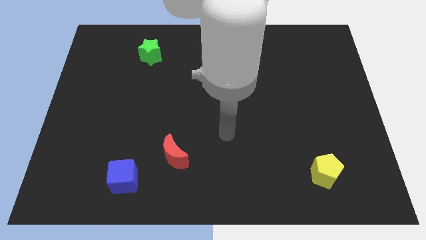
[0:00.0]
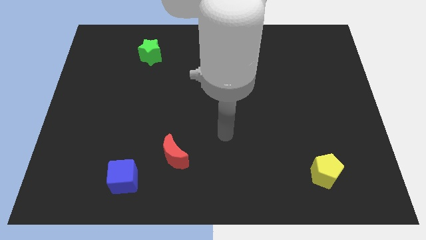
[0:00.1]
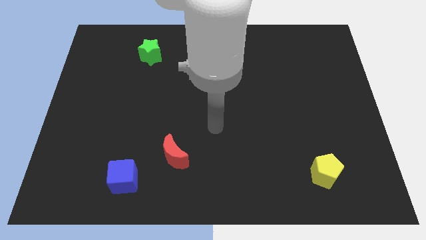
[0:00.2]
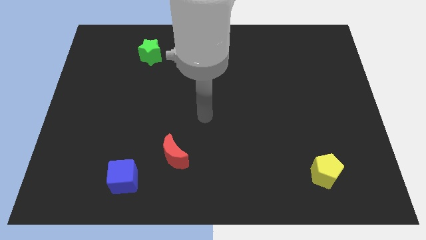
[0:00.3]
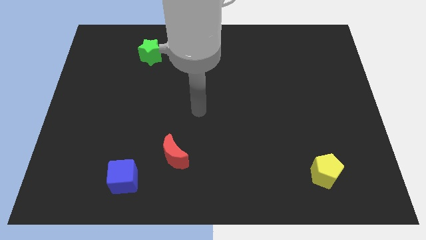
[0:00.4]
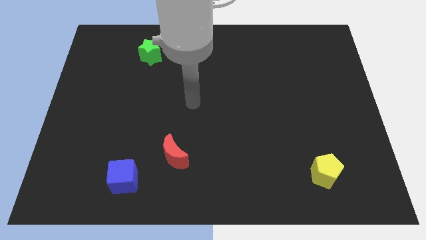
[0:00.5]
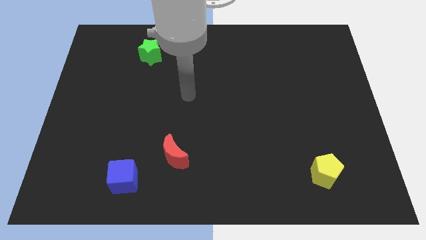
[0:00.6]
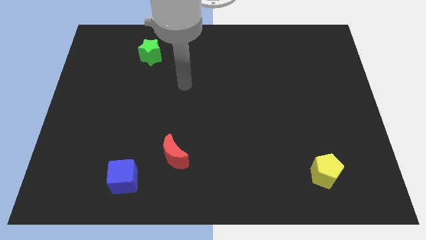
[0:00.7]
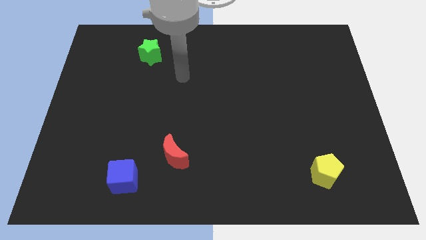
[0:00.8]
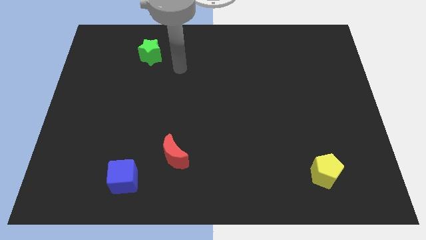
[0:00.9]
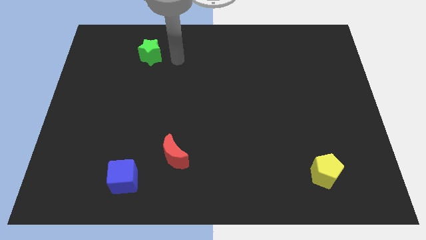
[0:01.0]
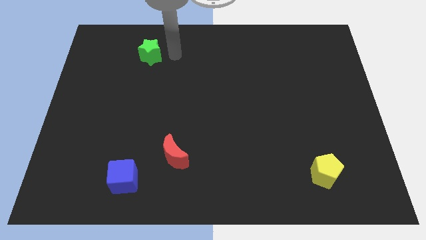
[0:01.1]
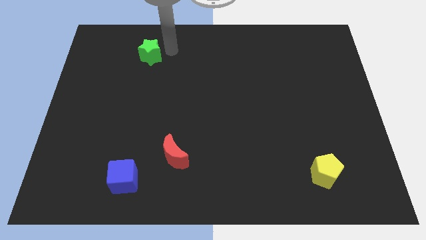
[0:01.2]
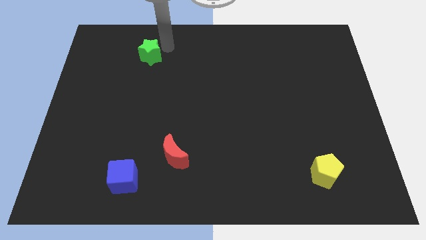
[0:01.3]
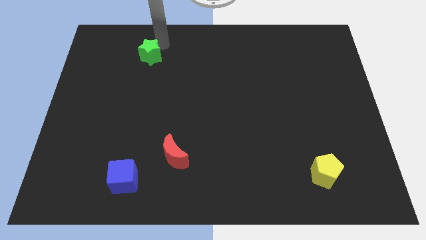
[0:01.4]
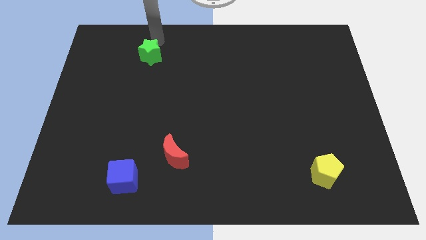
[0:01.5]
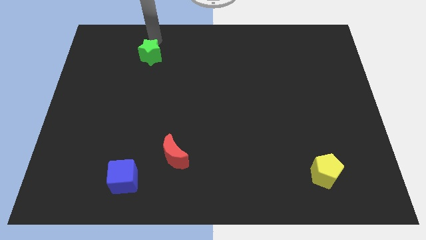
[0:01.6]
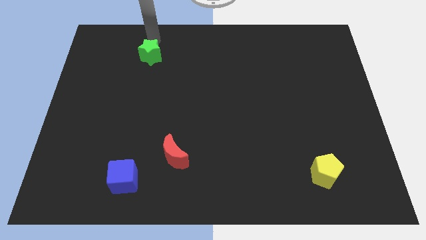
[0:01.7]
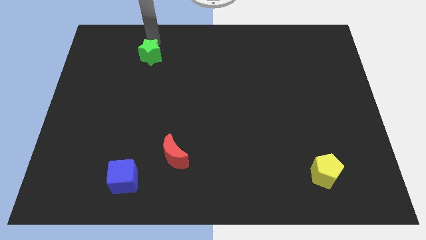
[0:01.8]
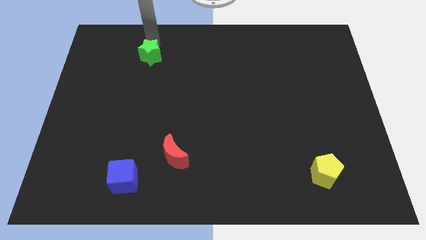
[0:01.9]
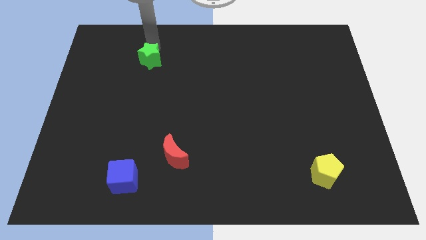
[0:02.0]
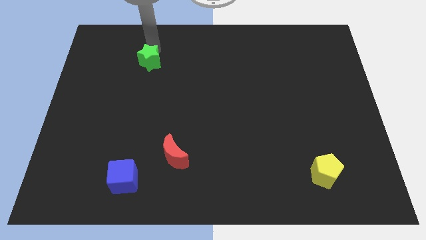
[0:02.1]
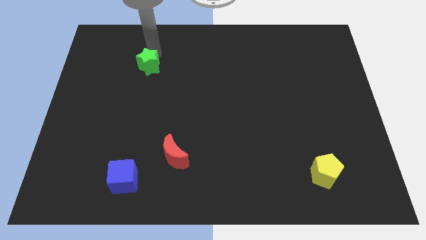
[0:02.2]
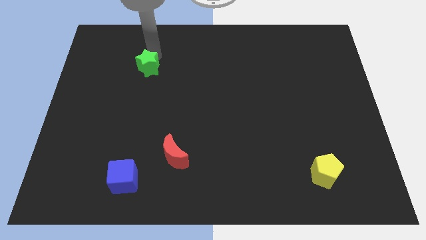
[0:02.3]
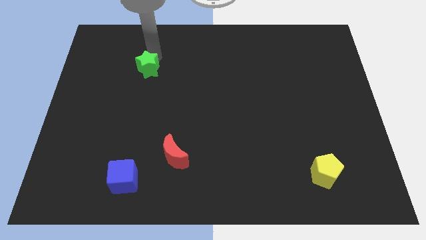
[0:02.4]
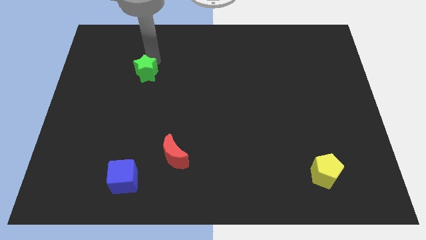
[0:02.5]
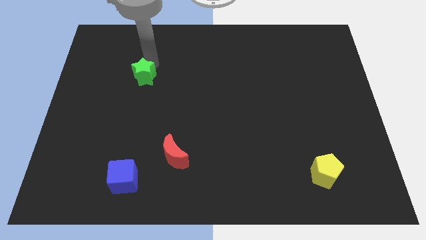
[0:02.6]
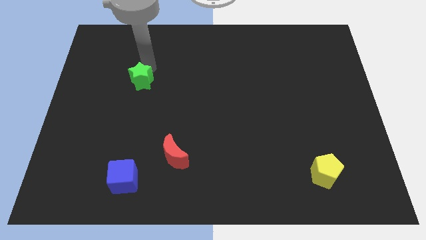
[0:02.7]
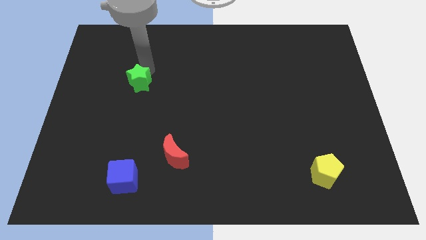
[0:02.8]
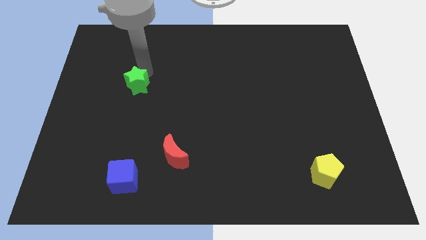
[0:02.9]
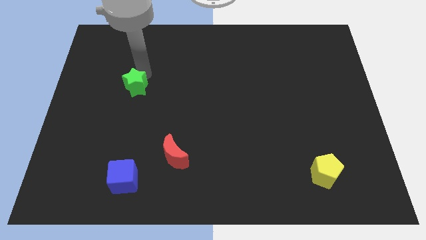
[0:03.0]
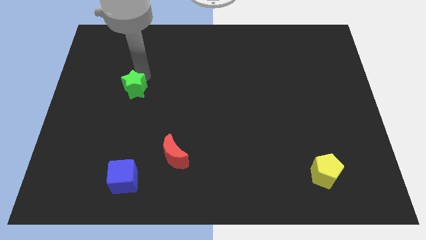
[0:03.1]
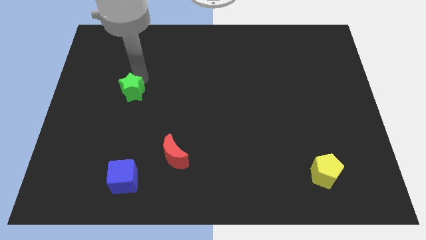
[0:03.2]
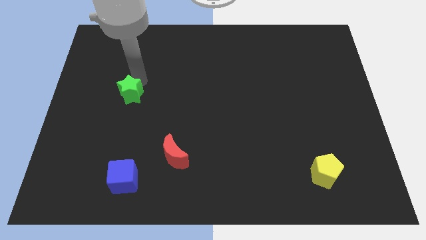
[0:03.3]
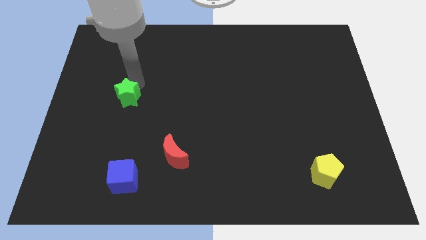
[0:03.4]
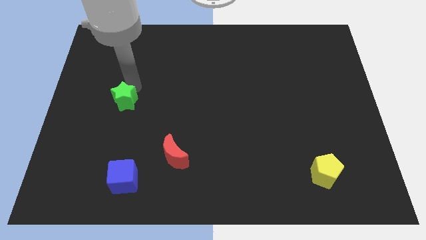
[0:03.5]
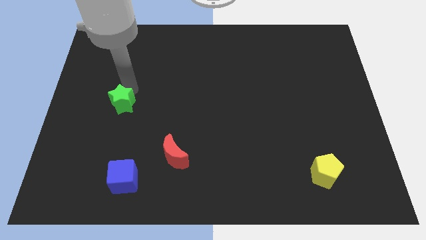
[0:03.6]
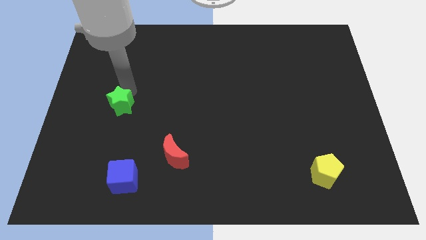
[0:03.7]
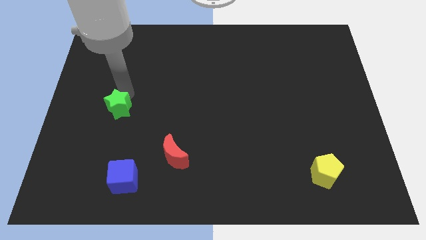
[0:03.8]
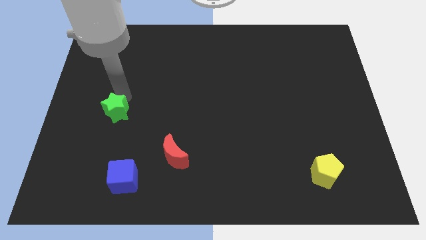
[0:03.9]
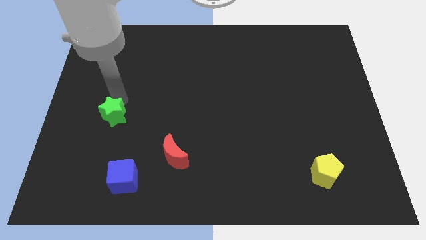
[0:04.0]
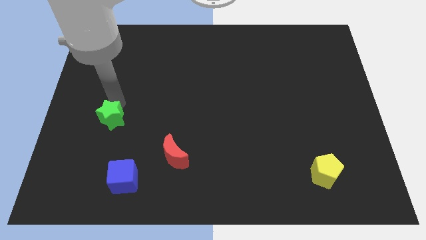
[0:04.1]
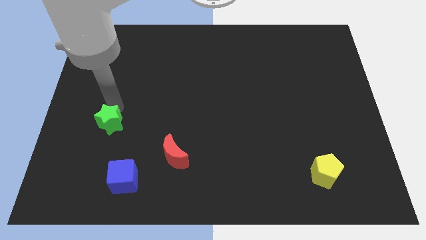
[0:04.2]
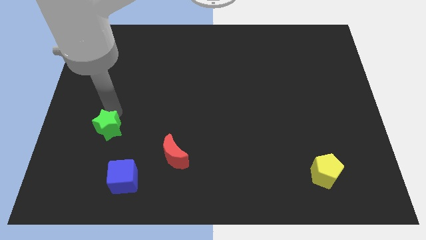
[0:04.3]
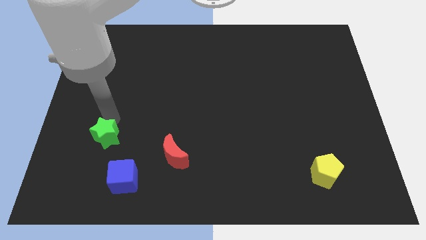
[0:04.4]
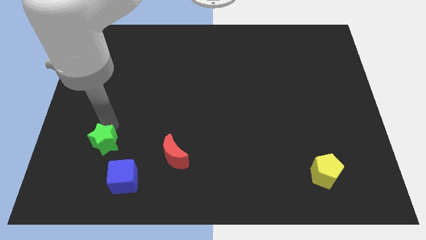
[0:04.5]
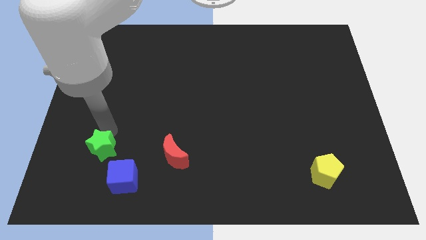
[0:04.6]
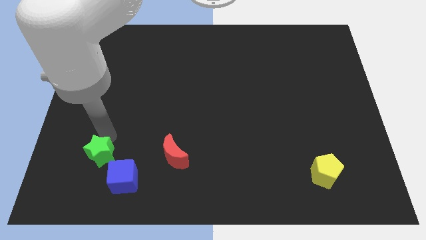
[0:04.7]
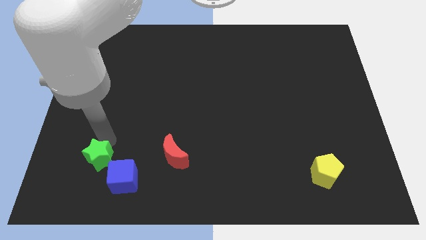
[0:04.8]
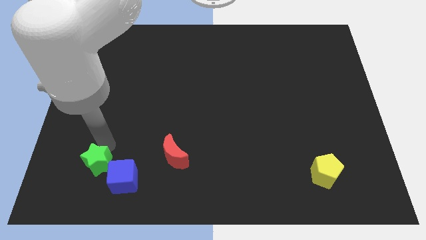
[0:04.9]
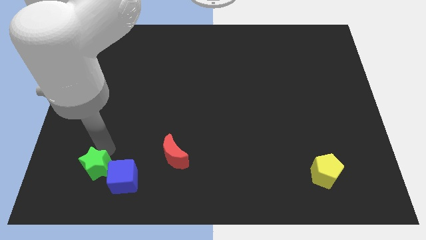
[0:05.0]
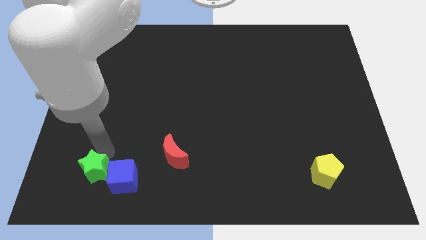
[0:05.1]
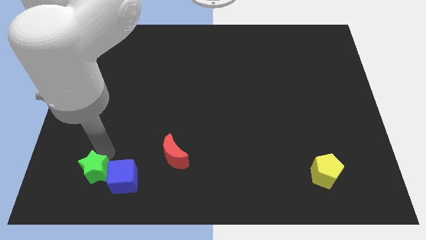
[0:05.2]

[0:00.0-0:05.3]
move the star next to the cube

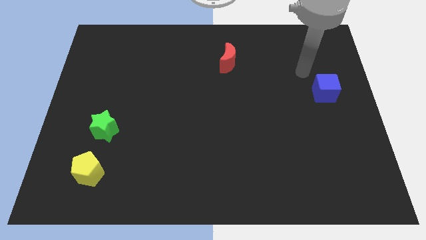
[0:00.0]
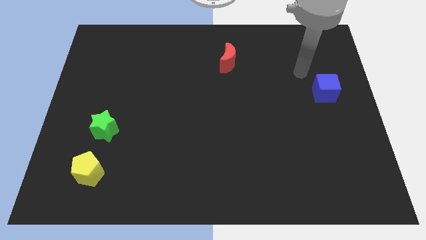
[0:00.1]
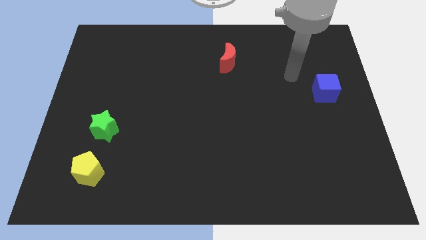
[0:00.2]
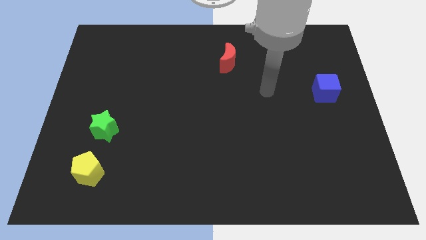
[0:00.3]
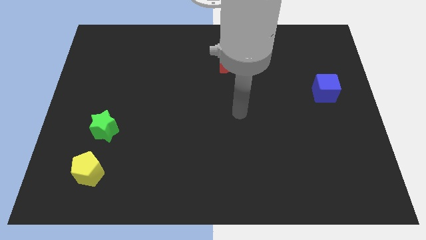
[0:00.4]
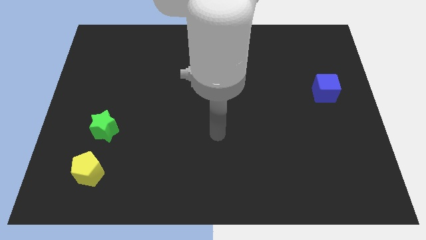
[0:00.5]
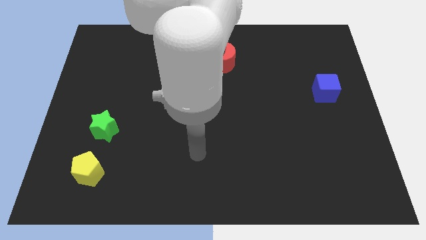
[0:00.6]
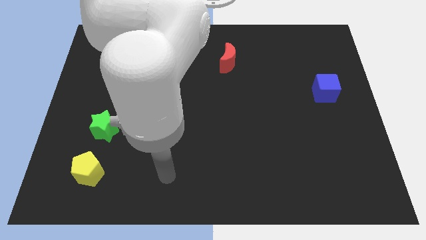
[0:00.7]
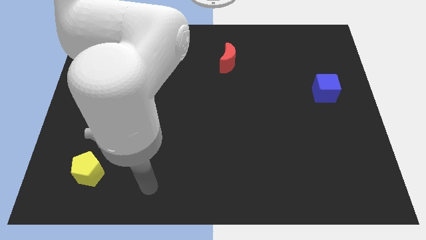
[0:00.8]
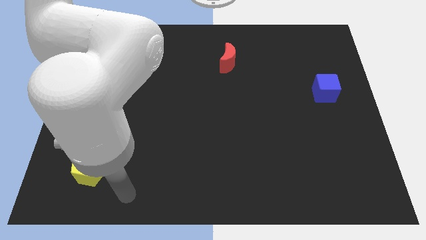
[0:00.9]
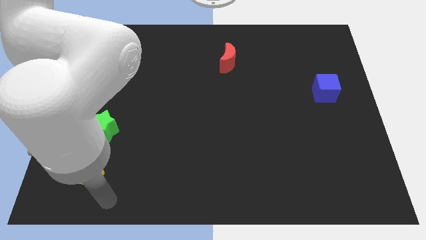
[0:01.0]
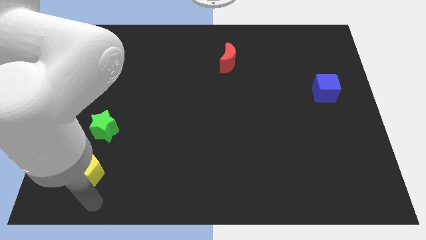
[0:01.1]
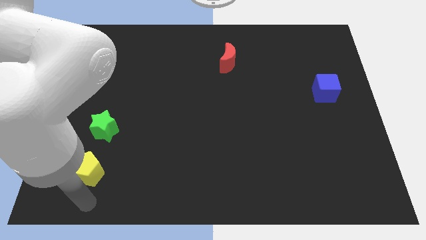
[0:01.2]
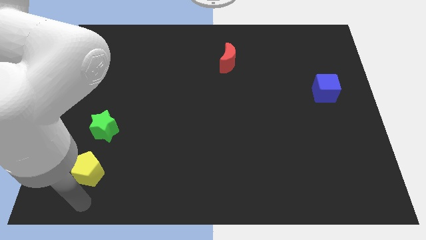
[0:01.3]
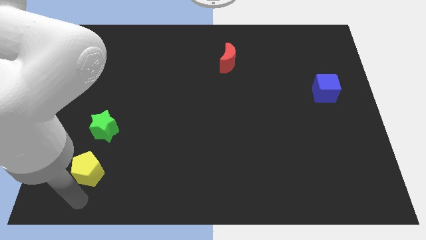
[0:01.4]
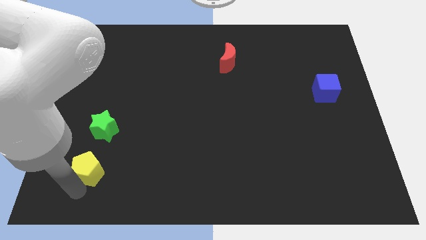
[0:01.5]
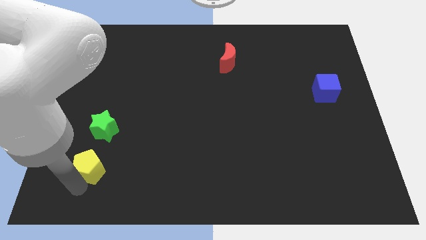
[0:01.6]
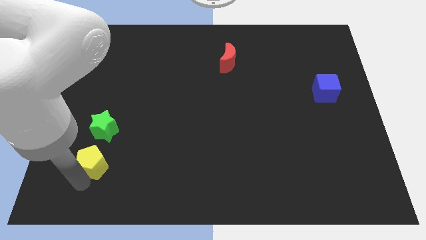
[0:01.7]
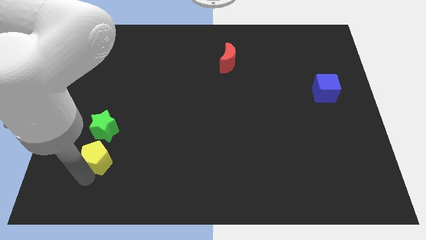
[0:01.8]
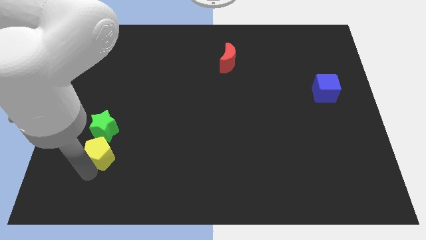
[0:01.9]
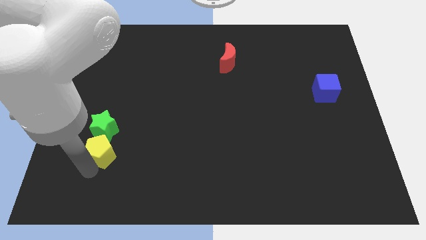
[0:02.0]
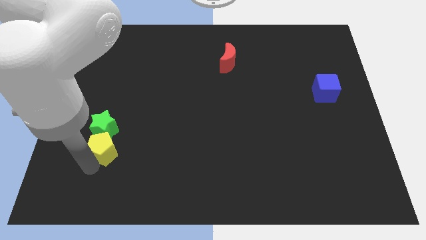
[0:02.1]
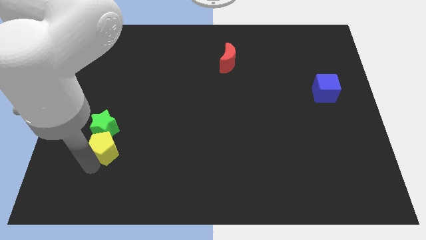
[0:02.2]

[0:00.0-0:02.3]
push the pentagon to the green star

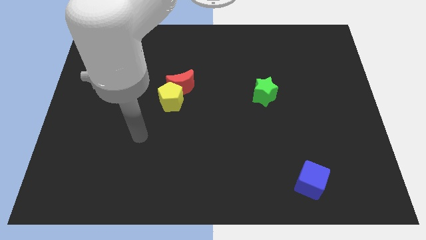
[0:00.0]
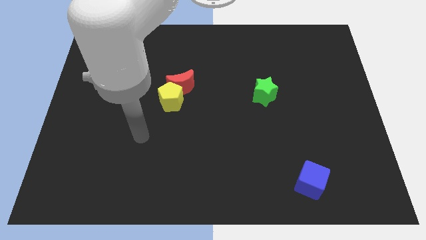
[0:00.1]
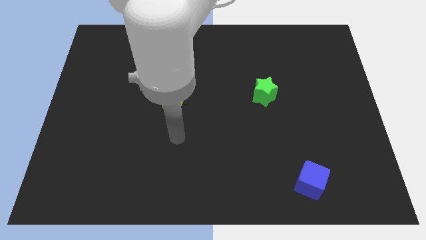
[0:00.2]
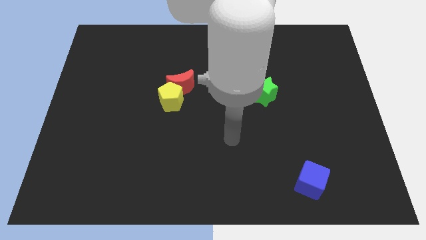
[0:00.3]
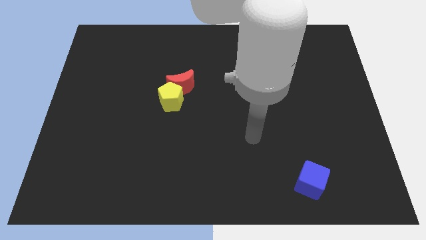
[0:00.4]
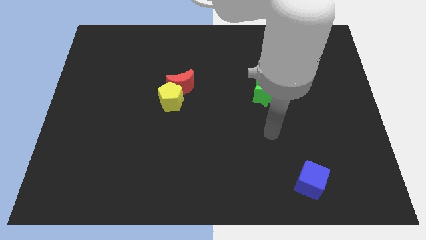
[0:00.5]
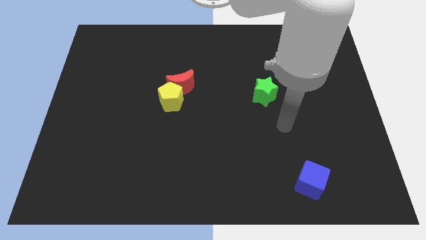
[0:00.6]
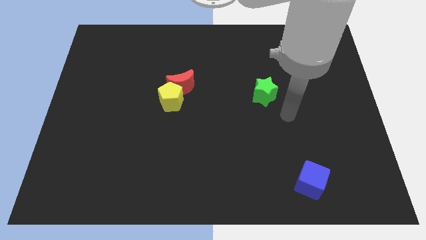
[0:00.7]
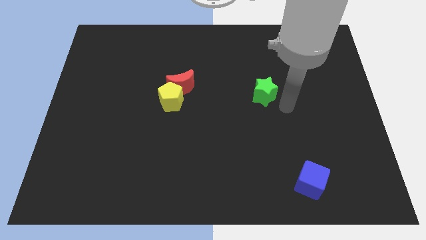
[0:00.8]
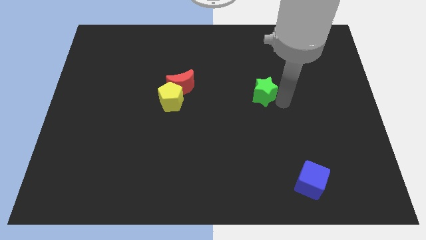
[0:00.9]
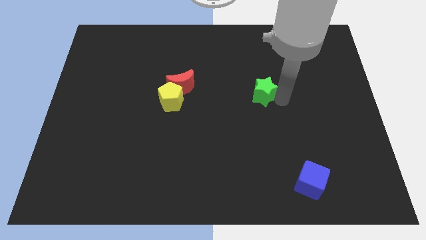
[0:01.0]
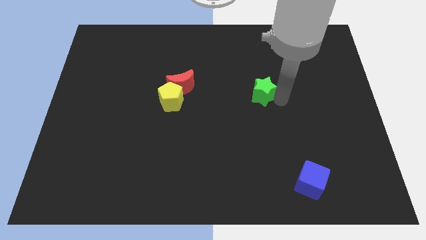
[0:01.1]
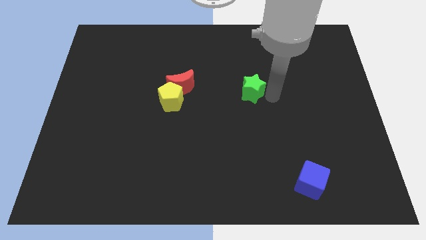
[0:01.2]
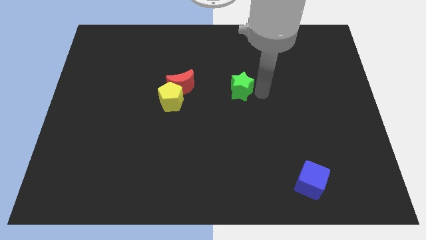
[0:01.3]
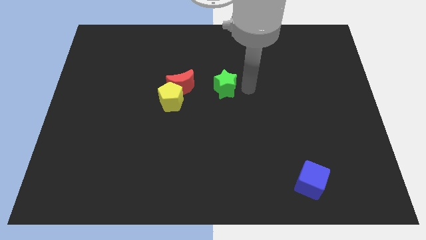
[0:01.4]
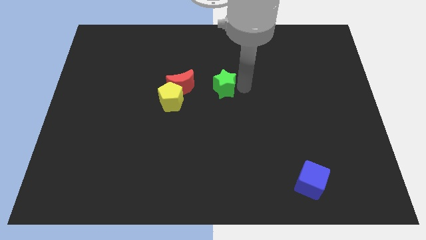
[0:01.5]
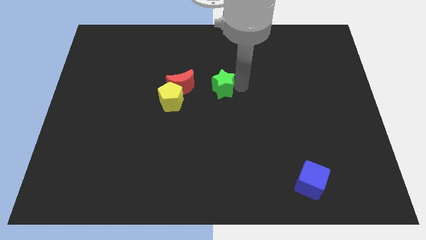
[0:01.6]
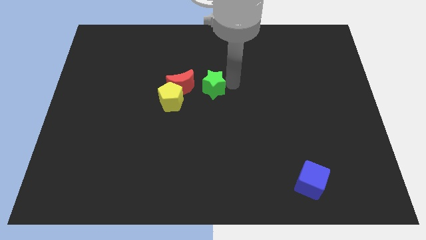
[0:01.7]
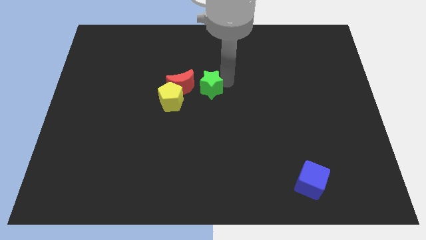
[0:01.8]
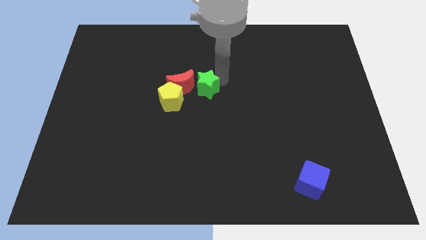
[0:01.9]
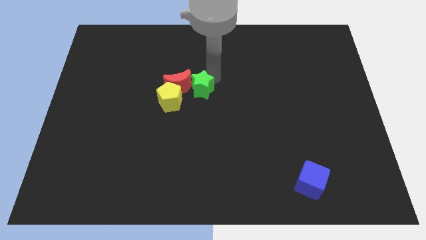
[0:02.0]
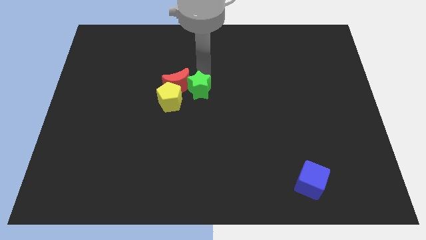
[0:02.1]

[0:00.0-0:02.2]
move the green star next to the red block
